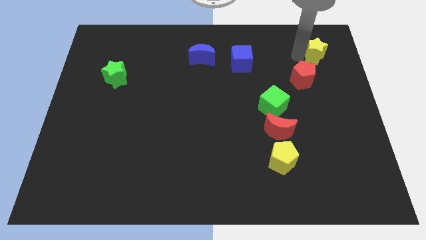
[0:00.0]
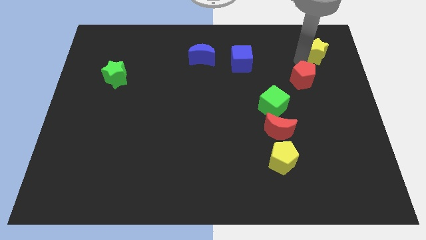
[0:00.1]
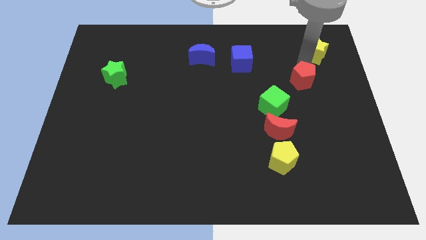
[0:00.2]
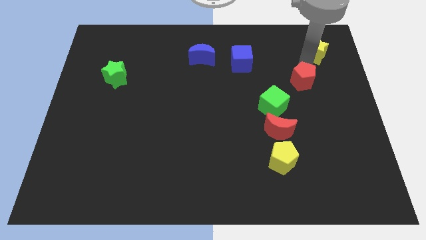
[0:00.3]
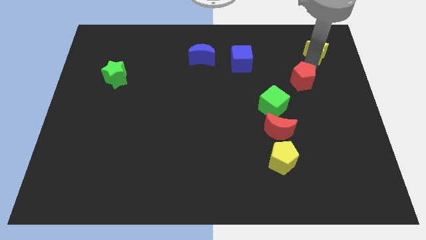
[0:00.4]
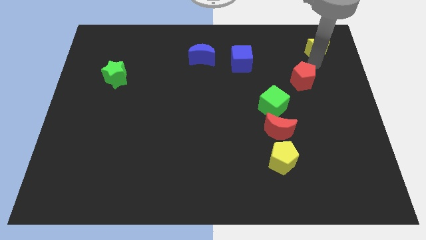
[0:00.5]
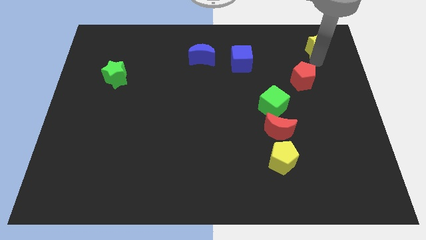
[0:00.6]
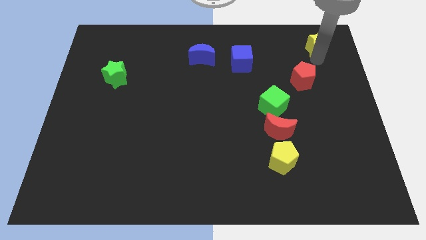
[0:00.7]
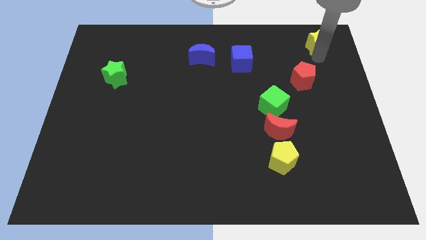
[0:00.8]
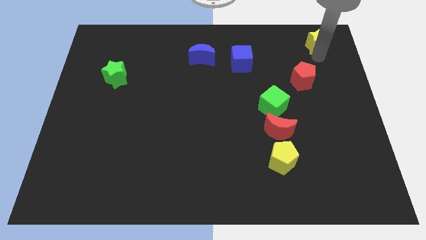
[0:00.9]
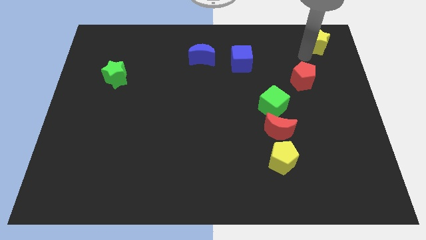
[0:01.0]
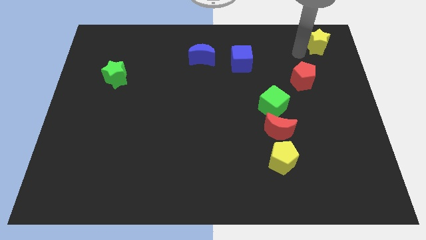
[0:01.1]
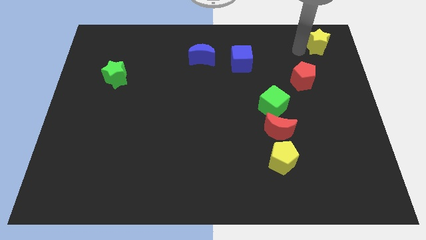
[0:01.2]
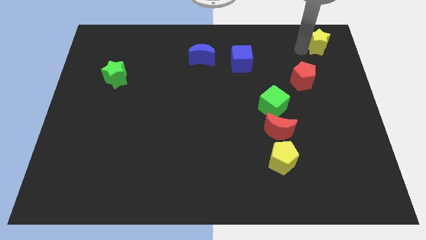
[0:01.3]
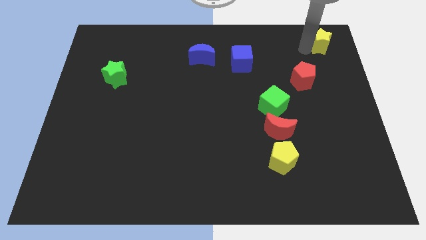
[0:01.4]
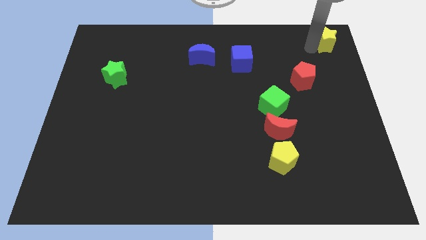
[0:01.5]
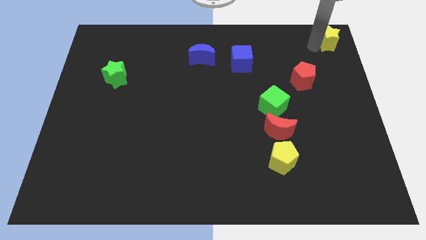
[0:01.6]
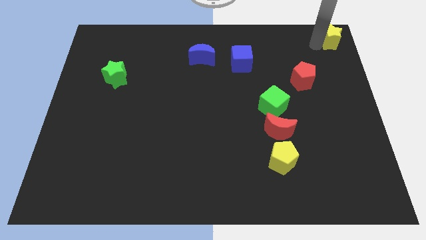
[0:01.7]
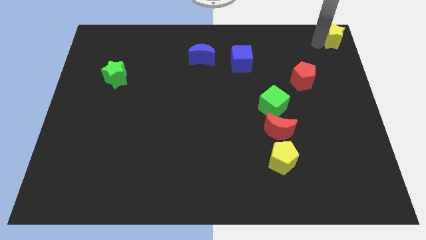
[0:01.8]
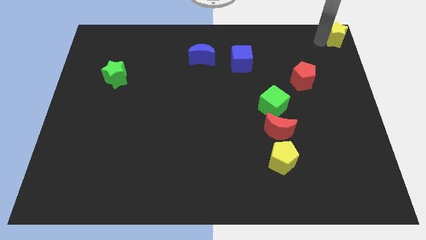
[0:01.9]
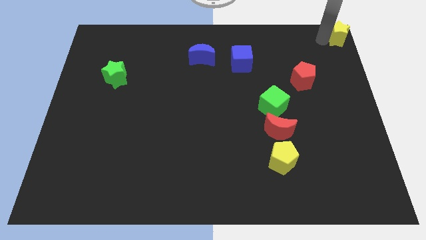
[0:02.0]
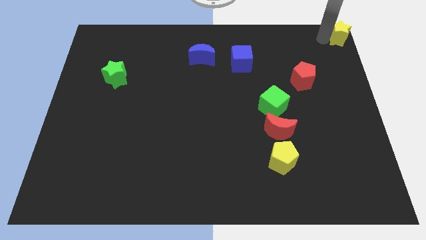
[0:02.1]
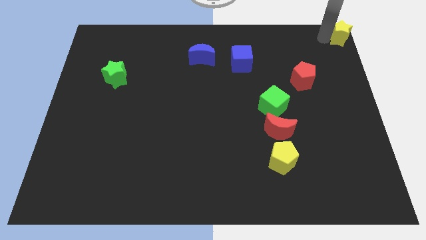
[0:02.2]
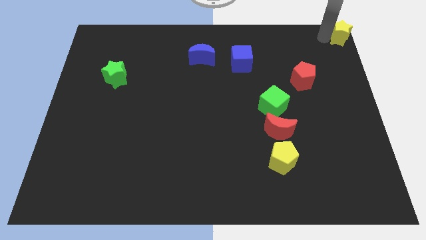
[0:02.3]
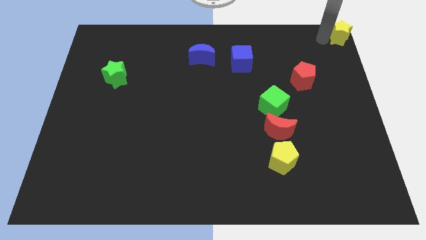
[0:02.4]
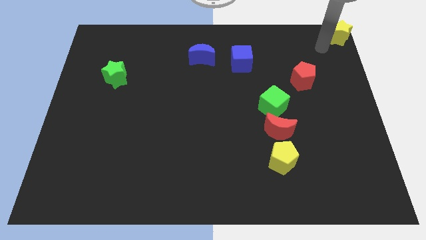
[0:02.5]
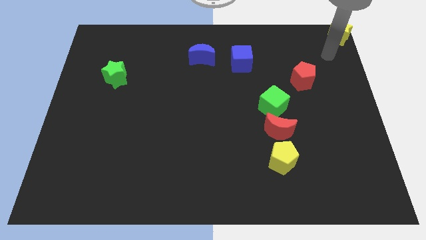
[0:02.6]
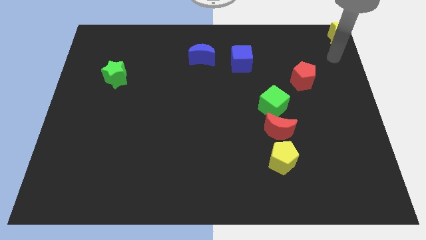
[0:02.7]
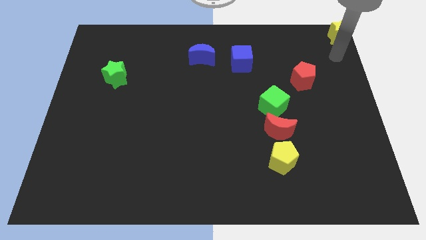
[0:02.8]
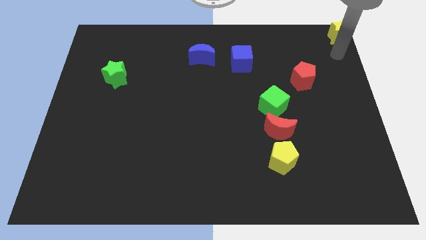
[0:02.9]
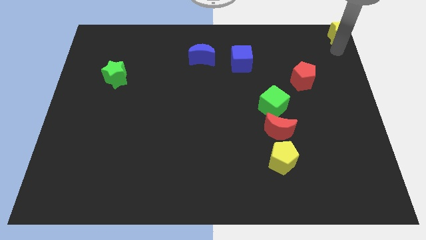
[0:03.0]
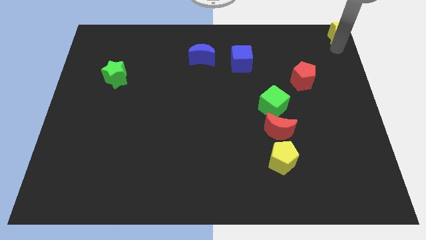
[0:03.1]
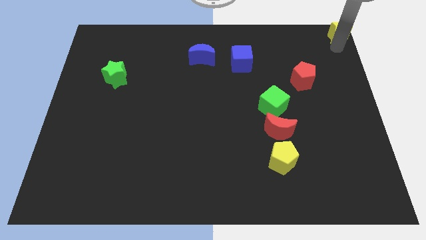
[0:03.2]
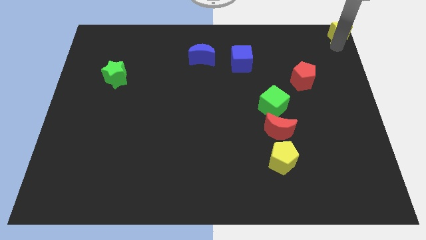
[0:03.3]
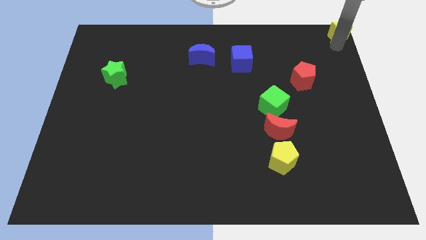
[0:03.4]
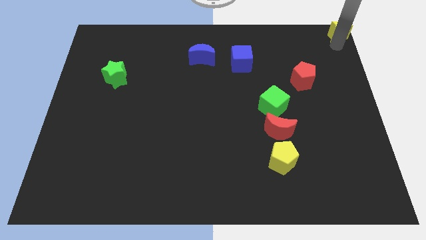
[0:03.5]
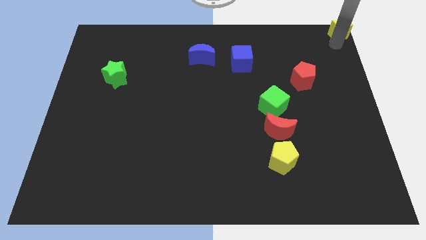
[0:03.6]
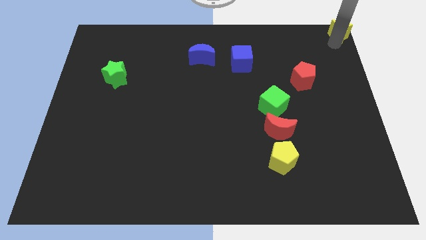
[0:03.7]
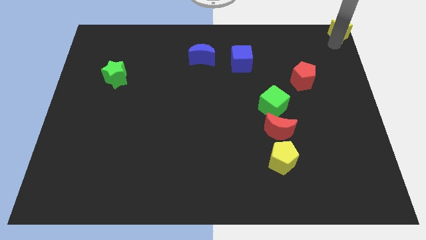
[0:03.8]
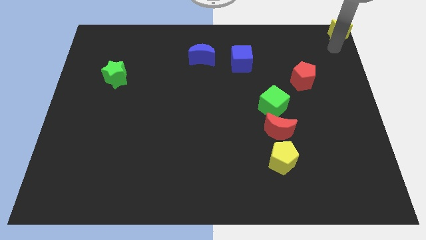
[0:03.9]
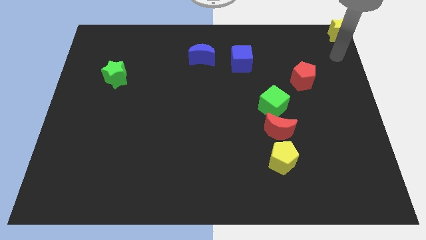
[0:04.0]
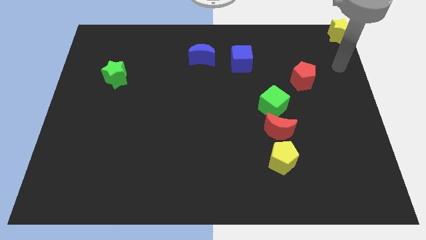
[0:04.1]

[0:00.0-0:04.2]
place the yellow star to the top right side of the board

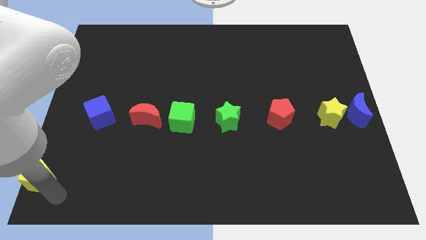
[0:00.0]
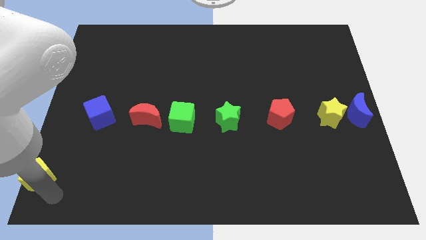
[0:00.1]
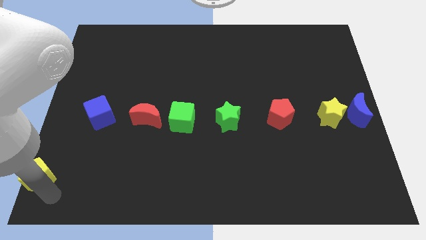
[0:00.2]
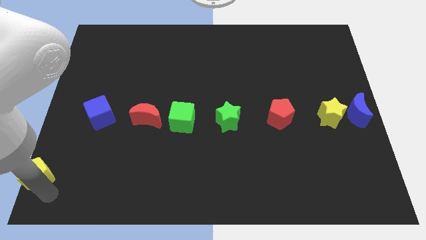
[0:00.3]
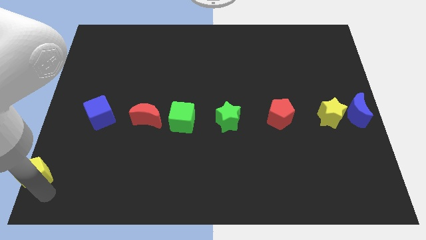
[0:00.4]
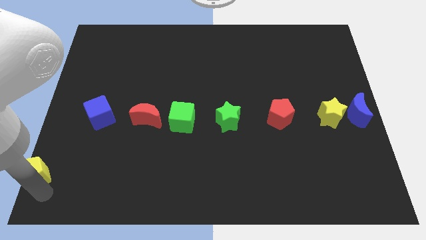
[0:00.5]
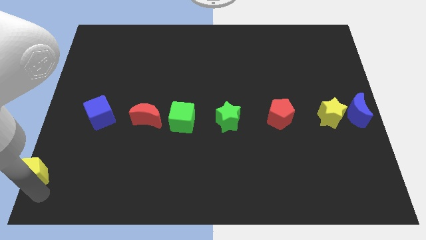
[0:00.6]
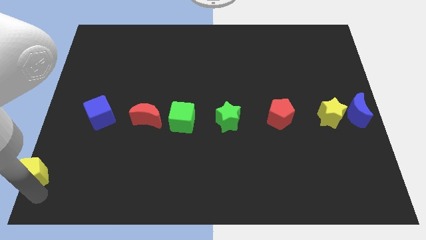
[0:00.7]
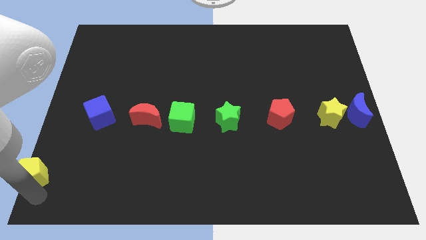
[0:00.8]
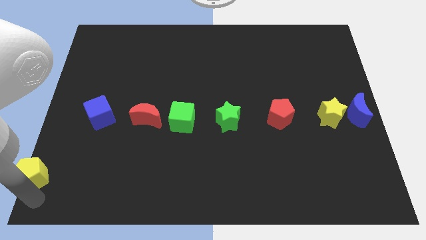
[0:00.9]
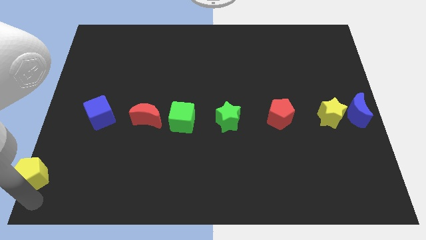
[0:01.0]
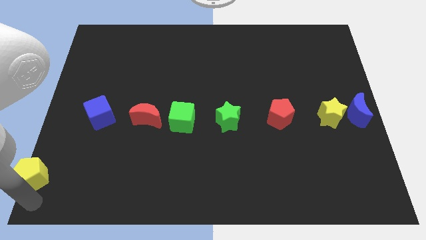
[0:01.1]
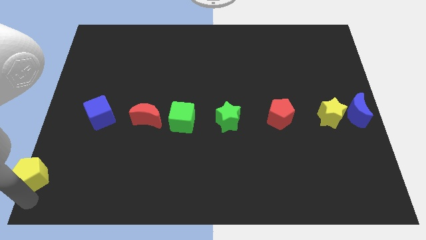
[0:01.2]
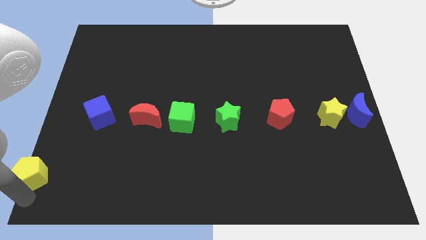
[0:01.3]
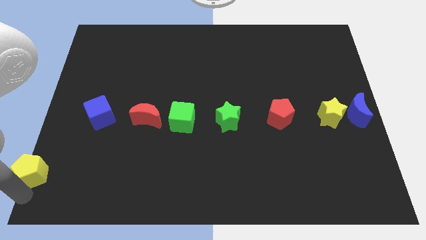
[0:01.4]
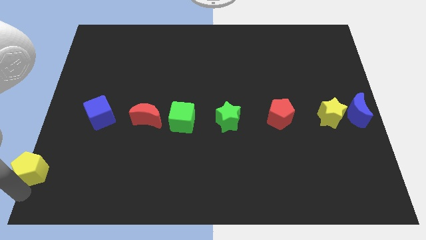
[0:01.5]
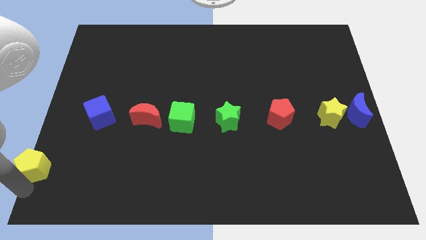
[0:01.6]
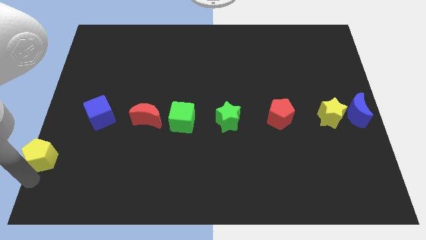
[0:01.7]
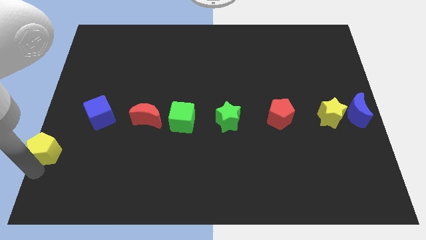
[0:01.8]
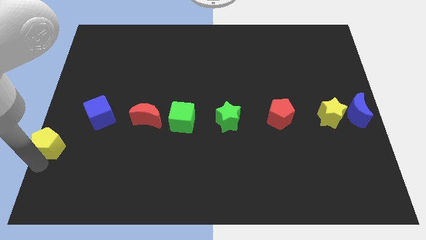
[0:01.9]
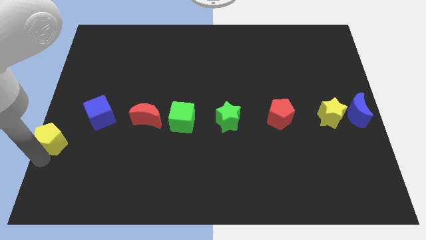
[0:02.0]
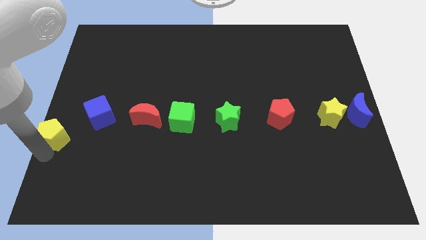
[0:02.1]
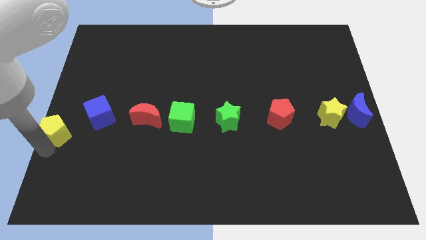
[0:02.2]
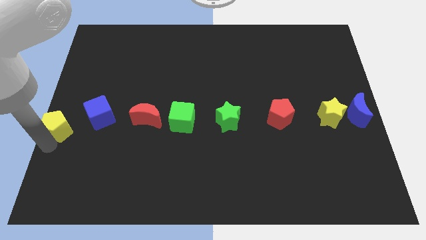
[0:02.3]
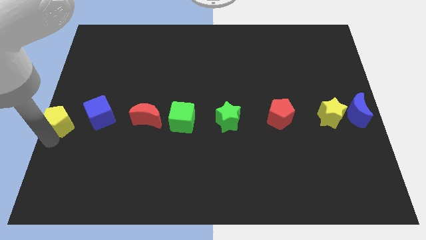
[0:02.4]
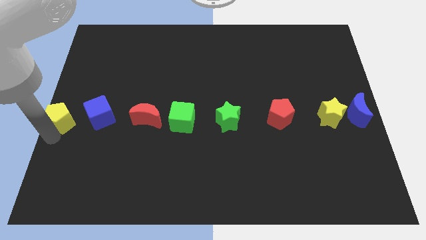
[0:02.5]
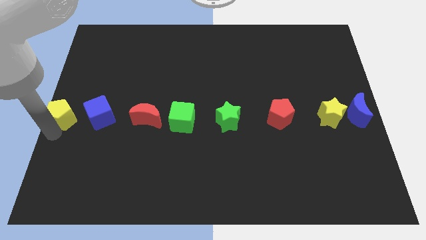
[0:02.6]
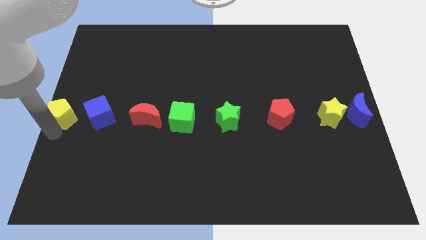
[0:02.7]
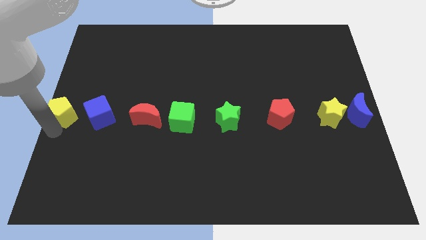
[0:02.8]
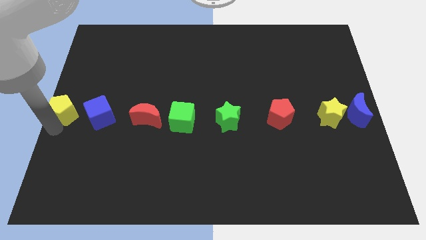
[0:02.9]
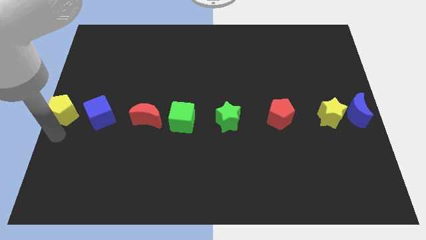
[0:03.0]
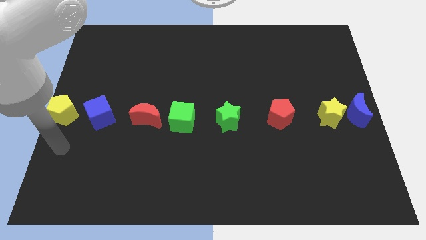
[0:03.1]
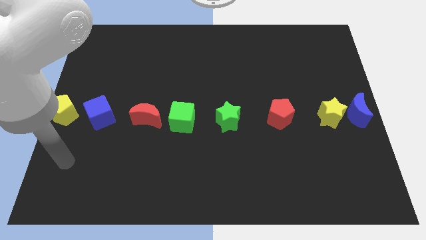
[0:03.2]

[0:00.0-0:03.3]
place yellow pentagon to the left of blue cube

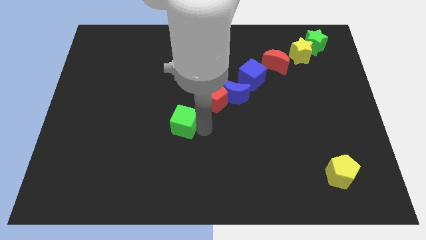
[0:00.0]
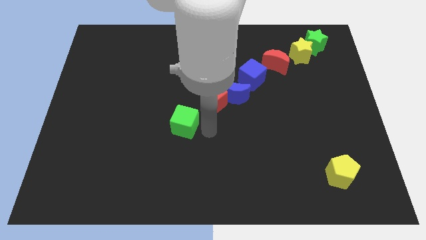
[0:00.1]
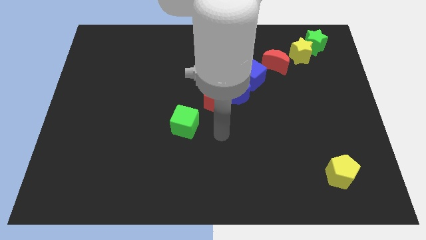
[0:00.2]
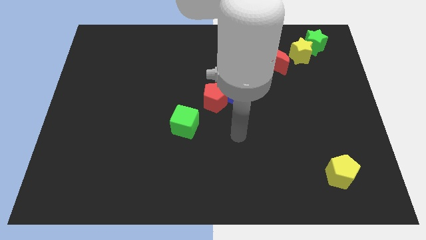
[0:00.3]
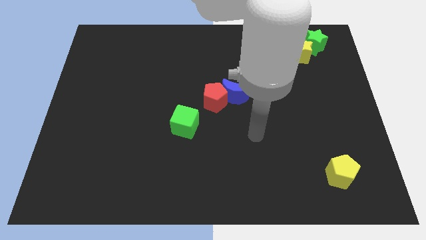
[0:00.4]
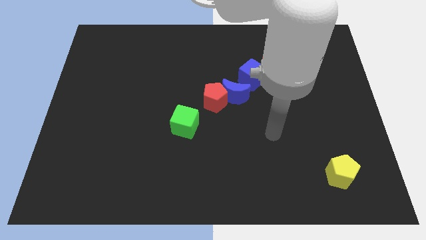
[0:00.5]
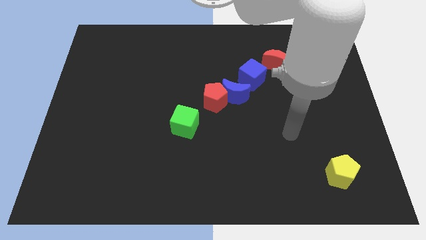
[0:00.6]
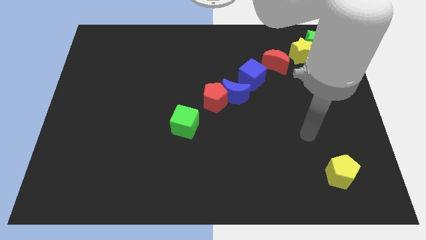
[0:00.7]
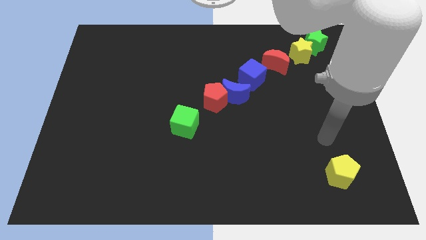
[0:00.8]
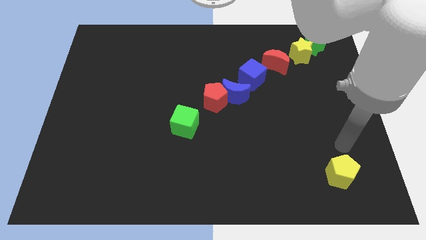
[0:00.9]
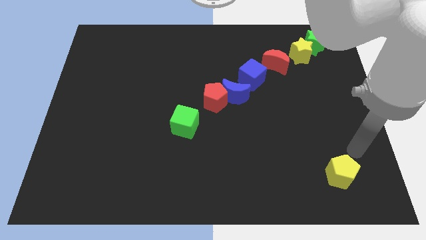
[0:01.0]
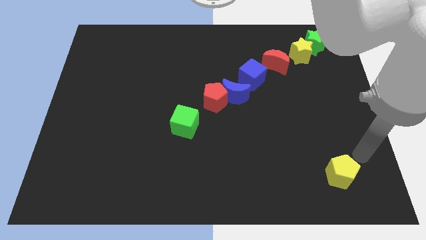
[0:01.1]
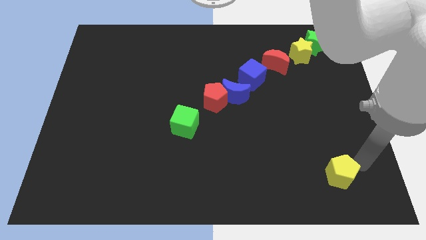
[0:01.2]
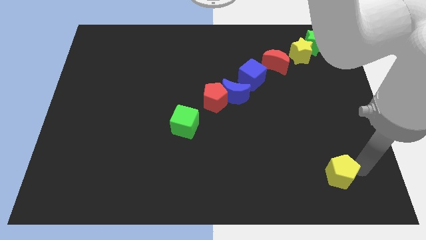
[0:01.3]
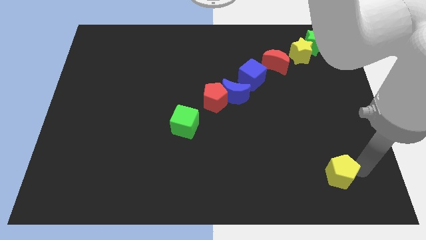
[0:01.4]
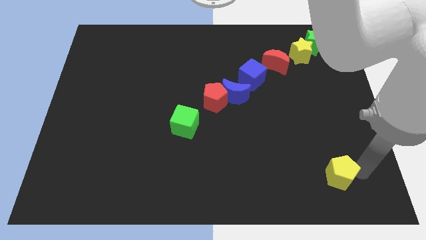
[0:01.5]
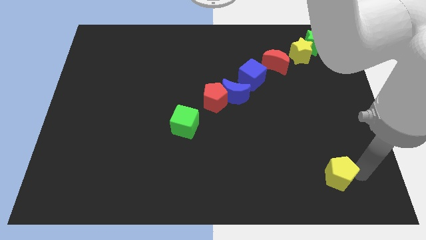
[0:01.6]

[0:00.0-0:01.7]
place your arm to the top right side of the yellow pentagon
